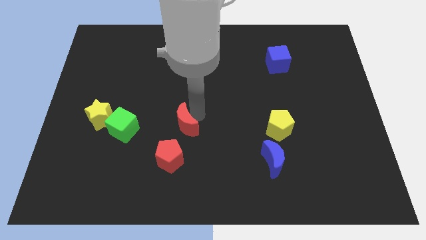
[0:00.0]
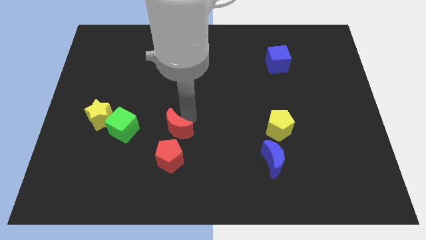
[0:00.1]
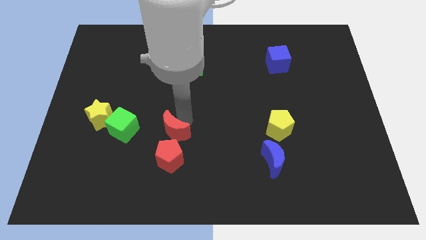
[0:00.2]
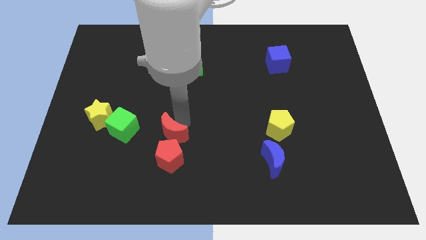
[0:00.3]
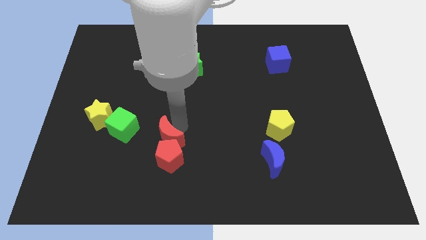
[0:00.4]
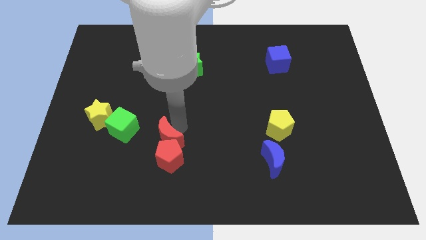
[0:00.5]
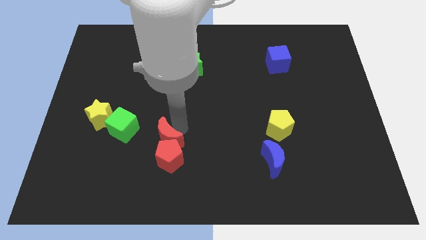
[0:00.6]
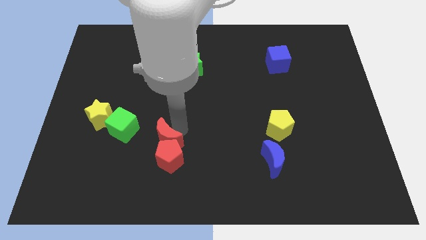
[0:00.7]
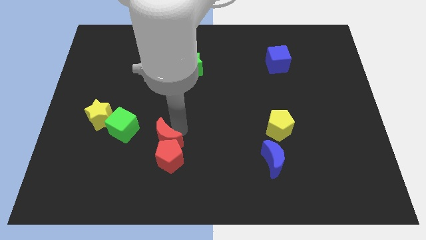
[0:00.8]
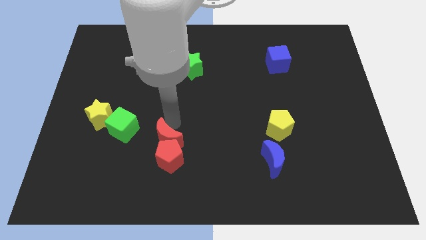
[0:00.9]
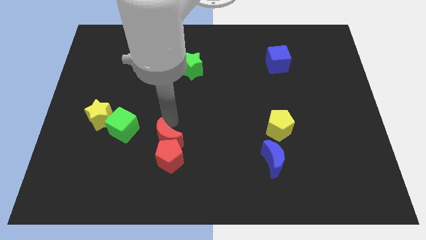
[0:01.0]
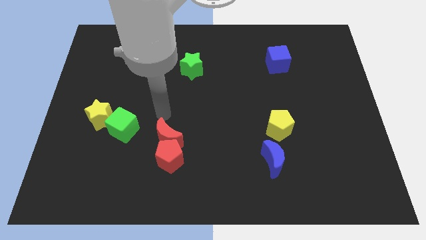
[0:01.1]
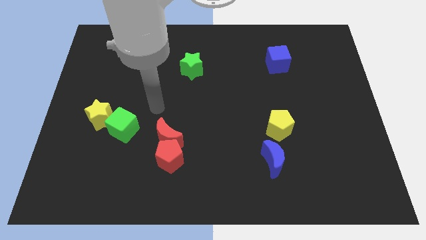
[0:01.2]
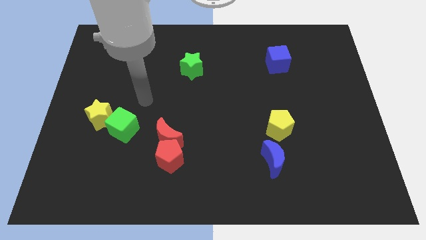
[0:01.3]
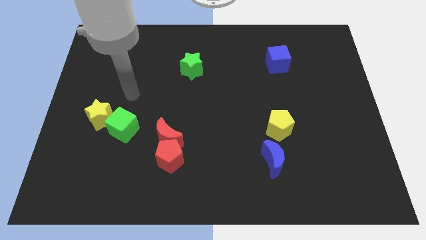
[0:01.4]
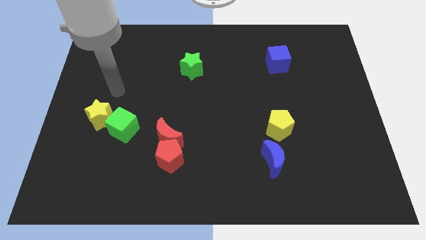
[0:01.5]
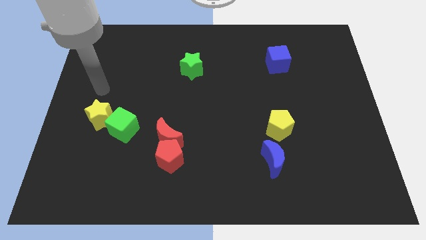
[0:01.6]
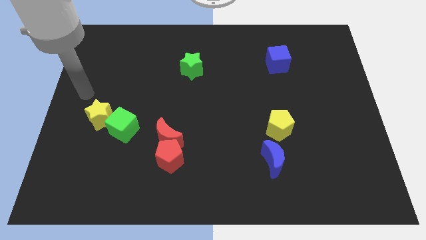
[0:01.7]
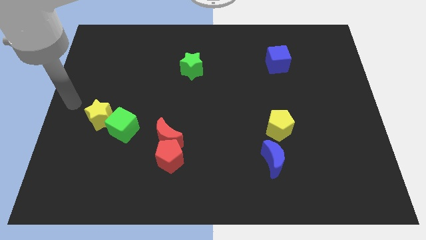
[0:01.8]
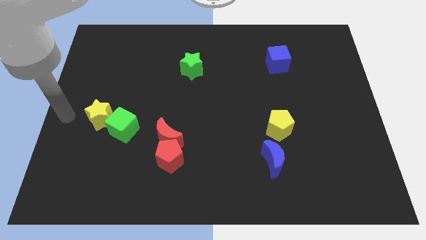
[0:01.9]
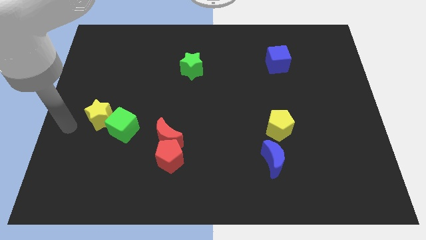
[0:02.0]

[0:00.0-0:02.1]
move the red moon above the red pentagon

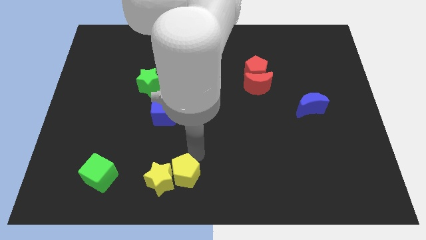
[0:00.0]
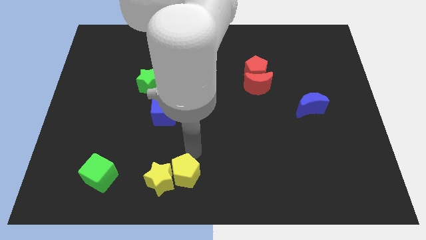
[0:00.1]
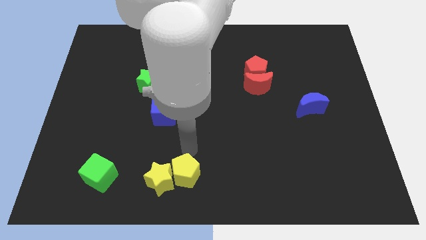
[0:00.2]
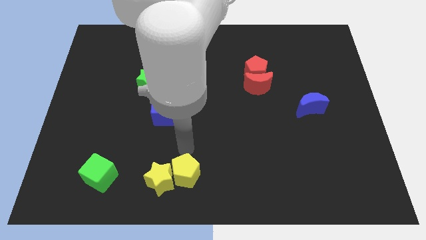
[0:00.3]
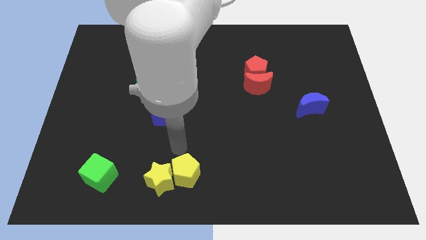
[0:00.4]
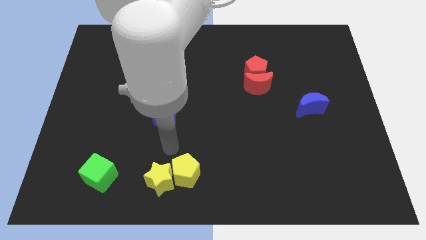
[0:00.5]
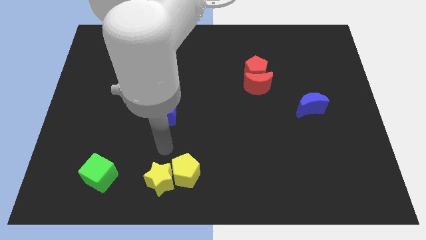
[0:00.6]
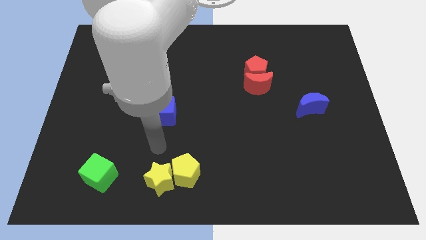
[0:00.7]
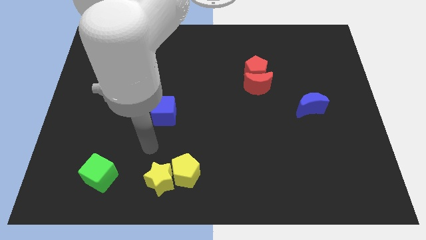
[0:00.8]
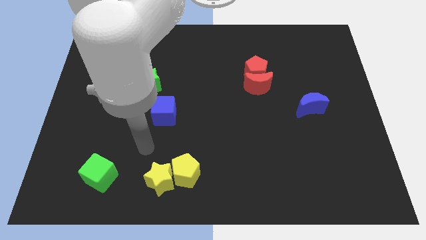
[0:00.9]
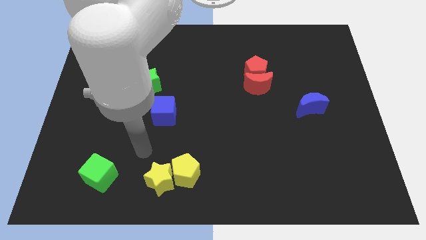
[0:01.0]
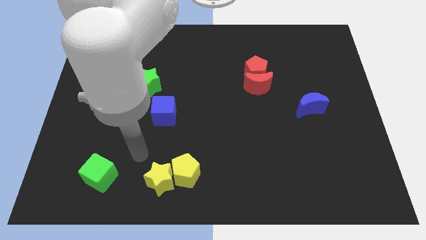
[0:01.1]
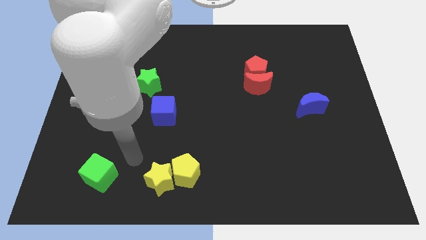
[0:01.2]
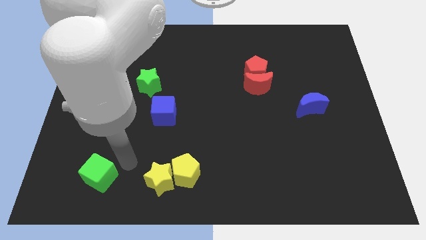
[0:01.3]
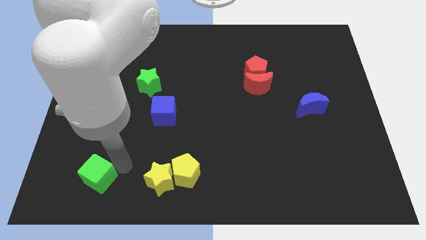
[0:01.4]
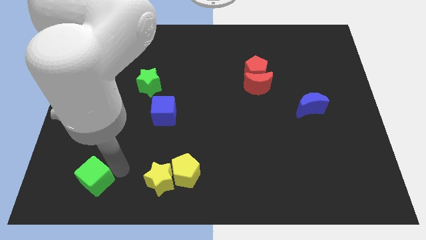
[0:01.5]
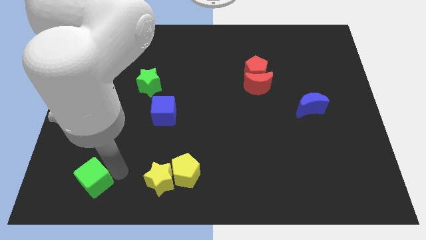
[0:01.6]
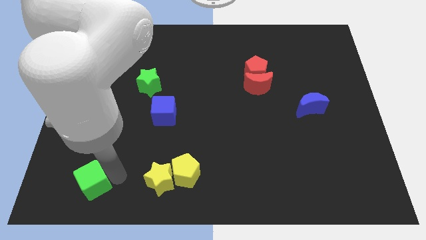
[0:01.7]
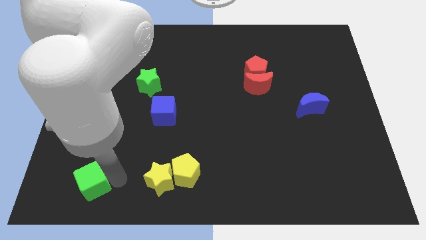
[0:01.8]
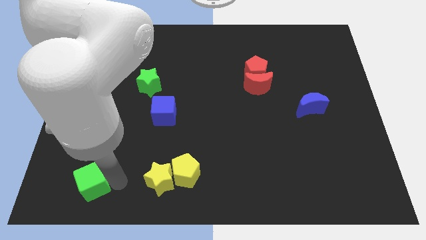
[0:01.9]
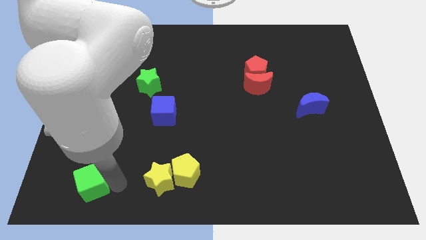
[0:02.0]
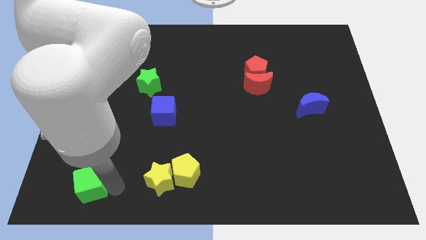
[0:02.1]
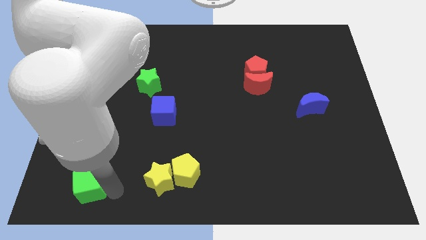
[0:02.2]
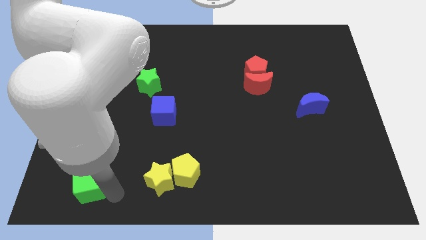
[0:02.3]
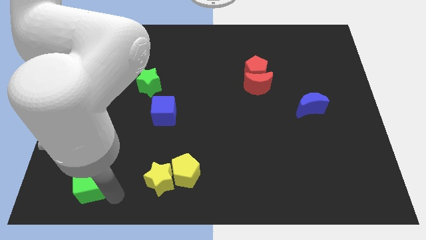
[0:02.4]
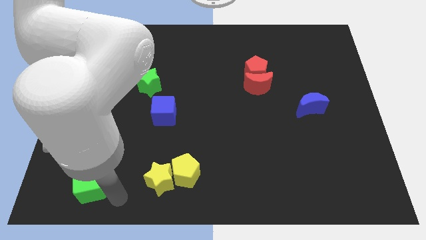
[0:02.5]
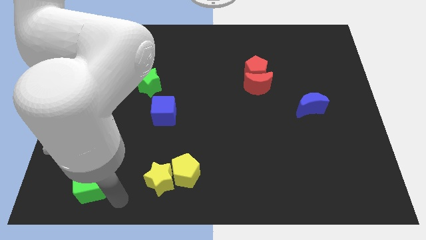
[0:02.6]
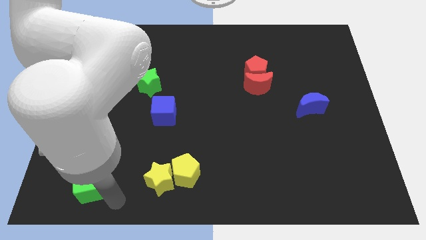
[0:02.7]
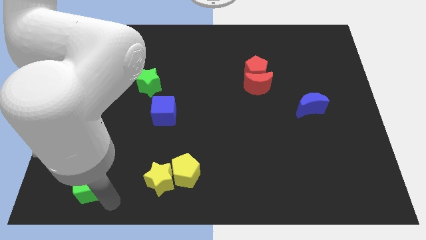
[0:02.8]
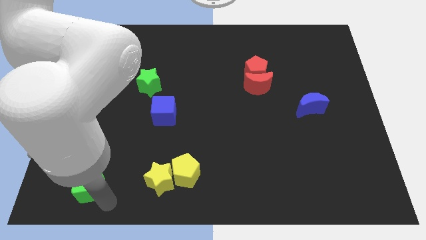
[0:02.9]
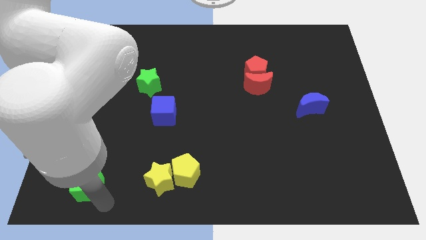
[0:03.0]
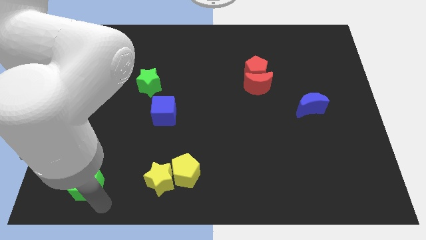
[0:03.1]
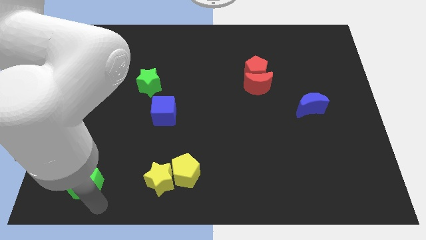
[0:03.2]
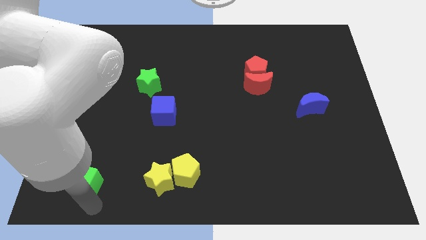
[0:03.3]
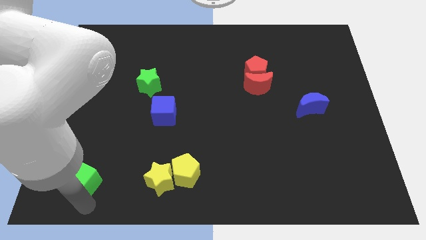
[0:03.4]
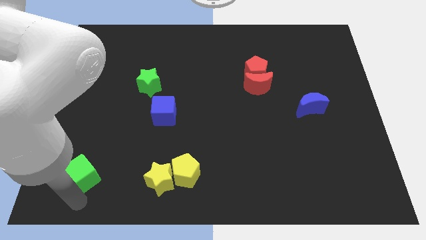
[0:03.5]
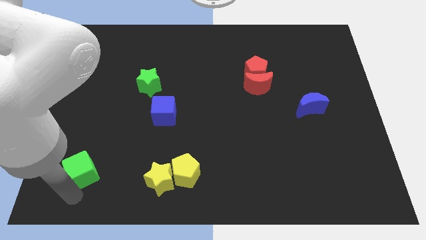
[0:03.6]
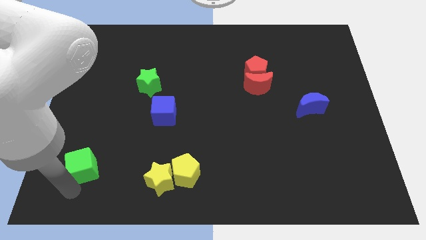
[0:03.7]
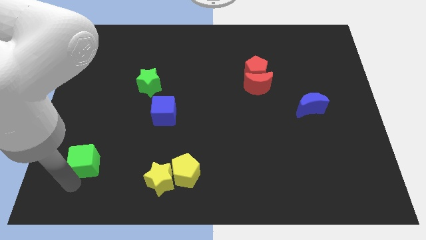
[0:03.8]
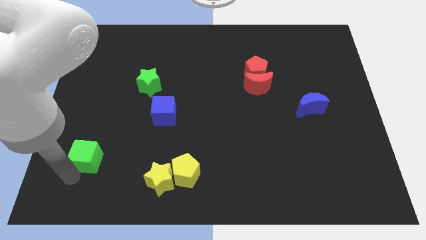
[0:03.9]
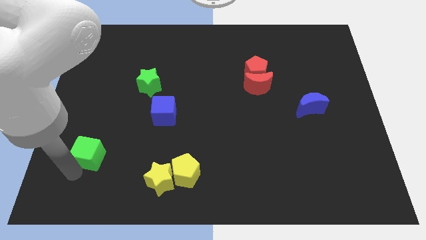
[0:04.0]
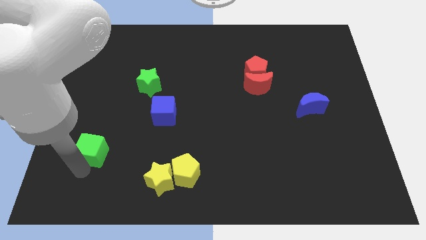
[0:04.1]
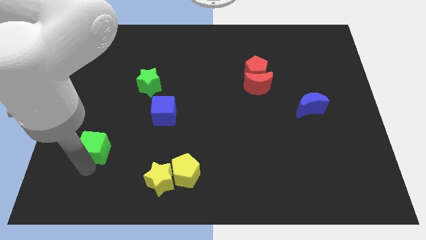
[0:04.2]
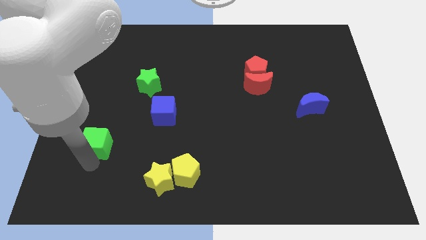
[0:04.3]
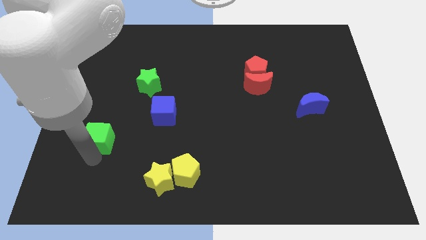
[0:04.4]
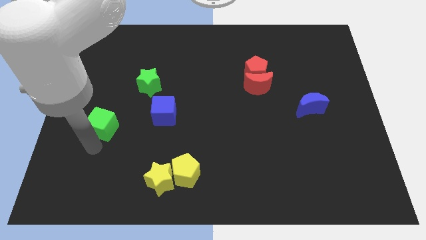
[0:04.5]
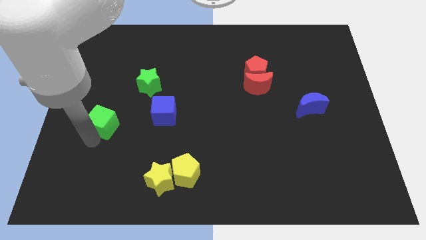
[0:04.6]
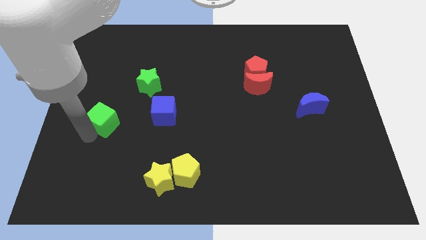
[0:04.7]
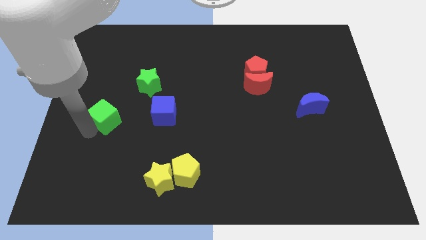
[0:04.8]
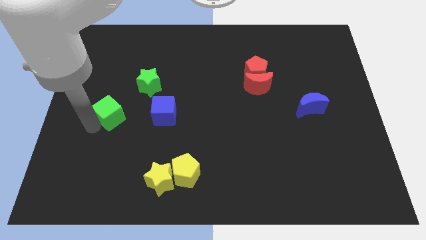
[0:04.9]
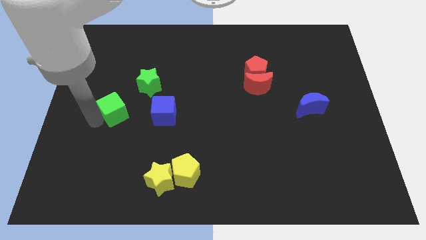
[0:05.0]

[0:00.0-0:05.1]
place the green cube at the bottom left of the green star

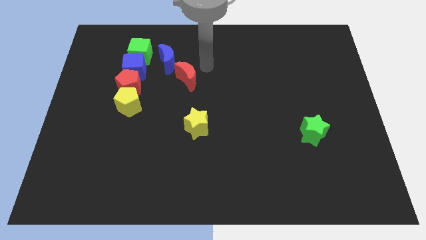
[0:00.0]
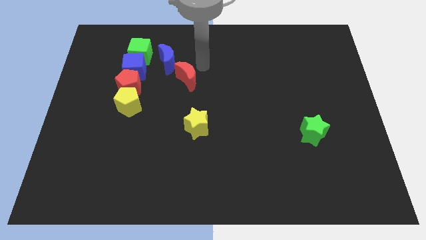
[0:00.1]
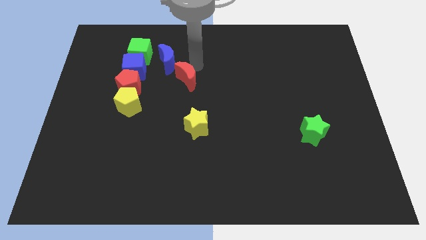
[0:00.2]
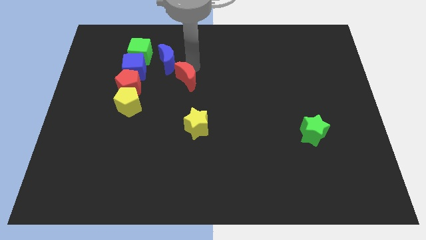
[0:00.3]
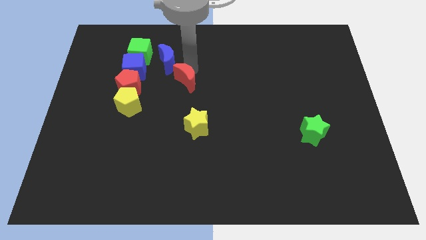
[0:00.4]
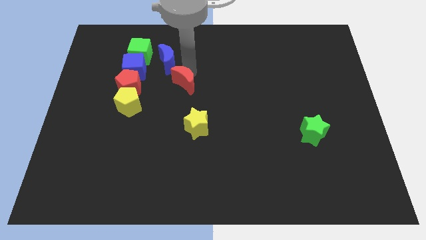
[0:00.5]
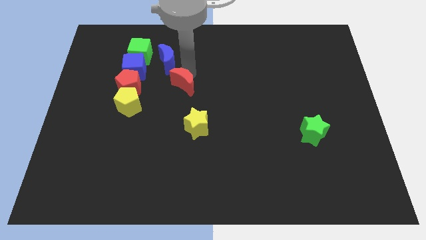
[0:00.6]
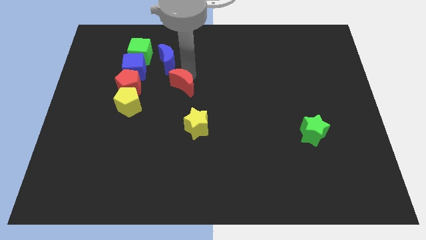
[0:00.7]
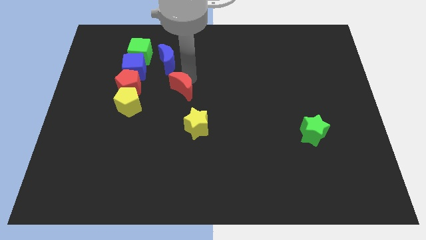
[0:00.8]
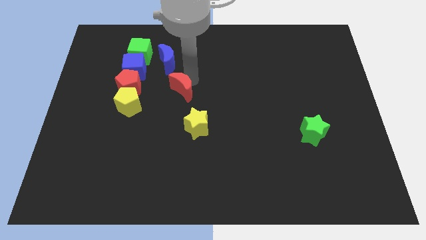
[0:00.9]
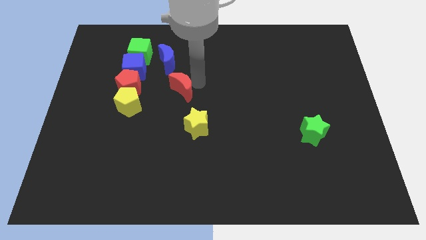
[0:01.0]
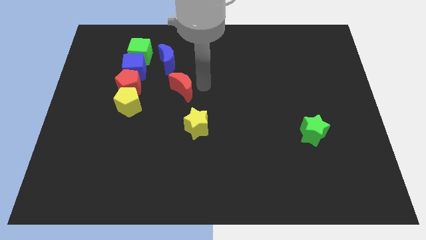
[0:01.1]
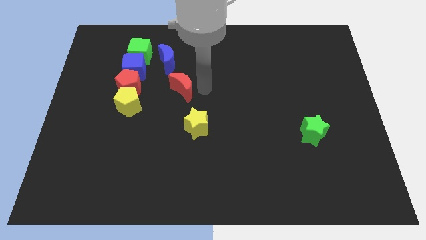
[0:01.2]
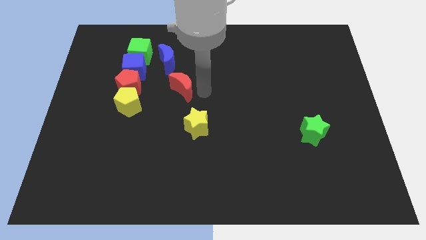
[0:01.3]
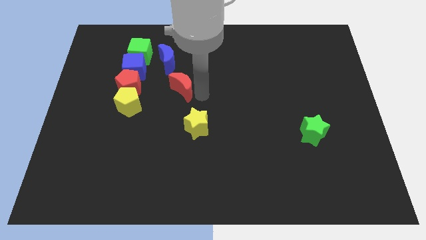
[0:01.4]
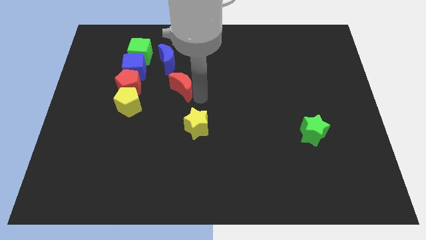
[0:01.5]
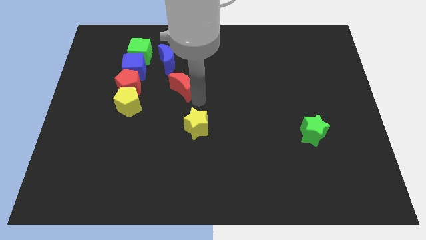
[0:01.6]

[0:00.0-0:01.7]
place red moon below blue moon
